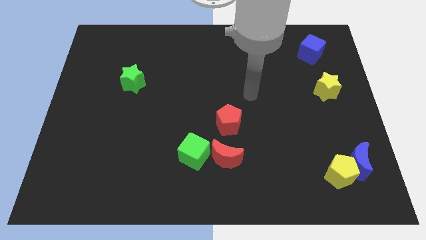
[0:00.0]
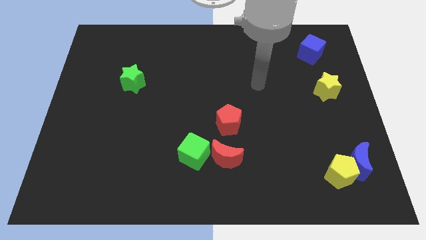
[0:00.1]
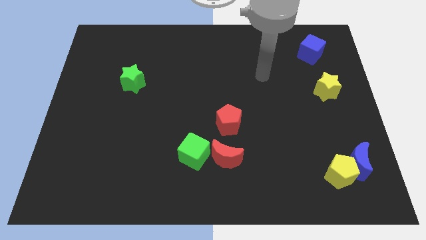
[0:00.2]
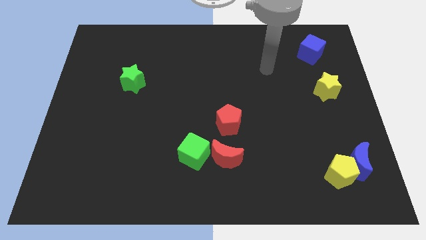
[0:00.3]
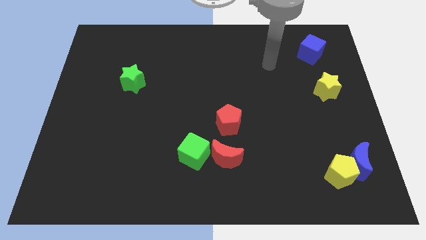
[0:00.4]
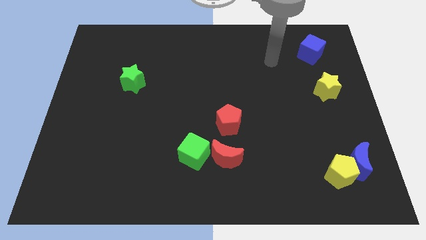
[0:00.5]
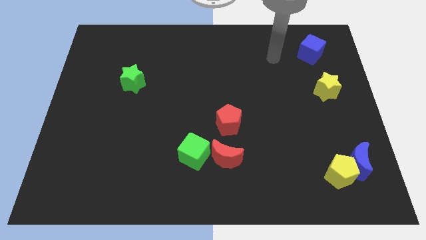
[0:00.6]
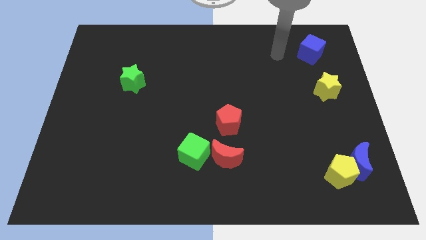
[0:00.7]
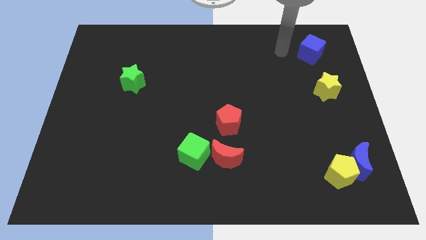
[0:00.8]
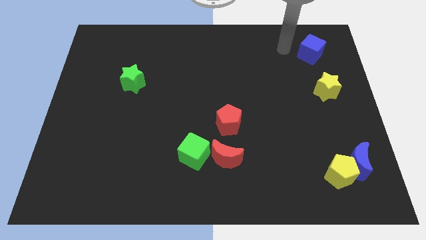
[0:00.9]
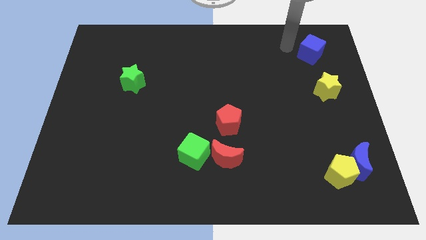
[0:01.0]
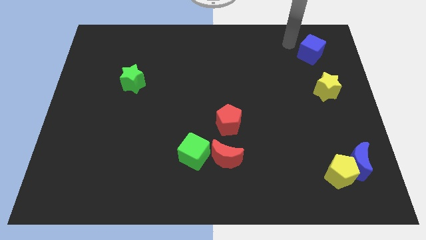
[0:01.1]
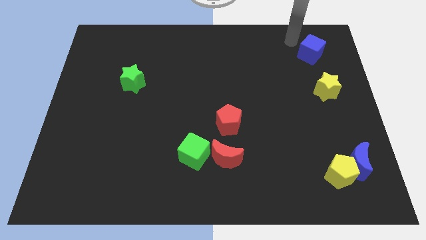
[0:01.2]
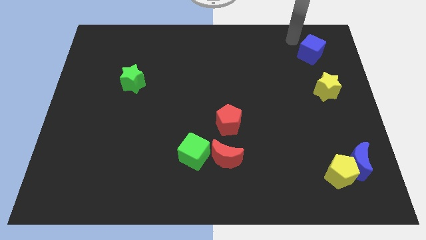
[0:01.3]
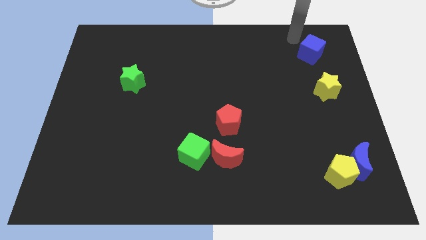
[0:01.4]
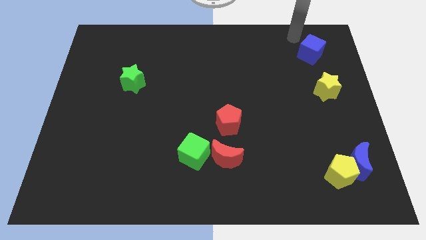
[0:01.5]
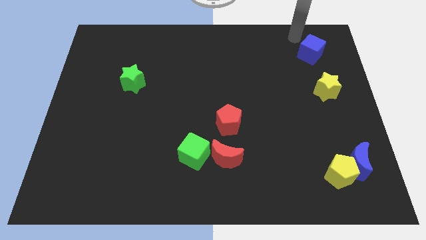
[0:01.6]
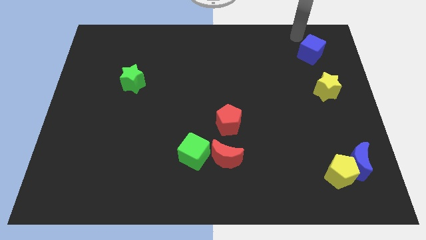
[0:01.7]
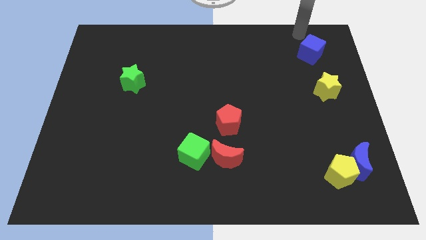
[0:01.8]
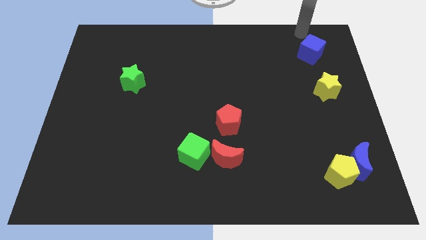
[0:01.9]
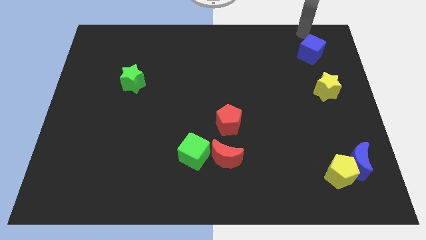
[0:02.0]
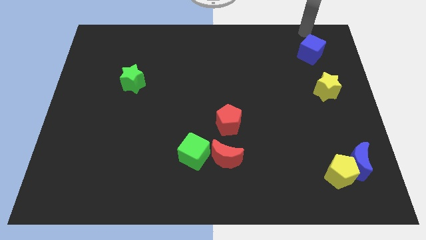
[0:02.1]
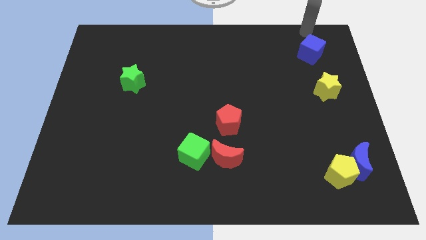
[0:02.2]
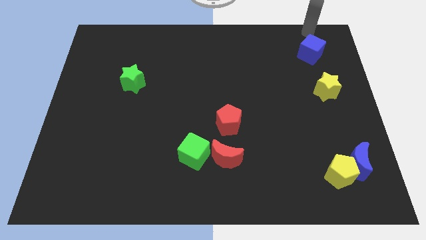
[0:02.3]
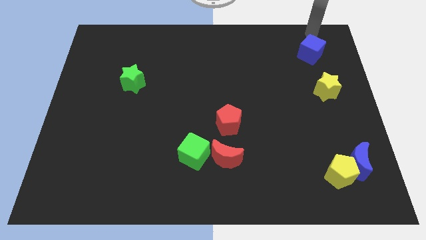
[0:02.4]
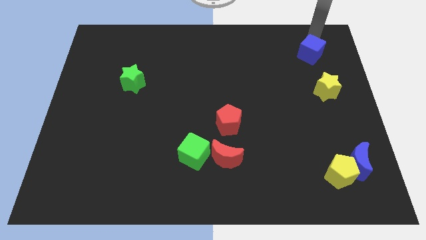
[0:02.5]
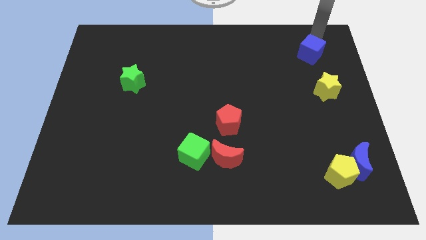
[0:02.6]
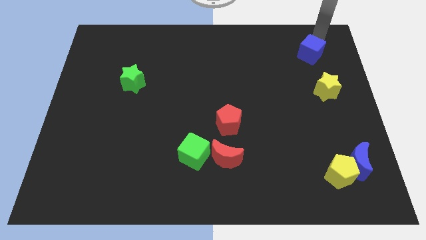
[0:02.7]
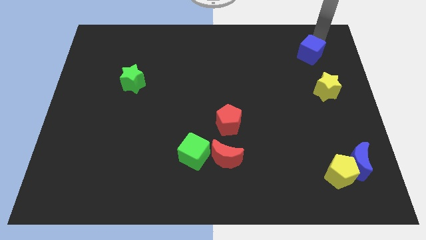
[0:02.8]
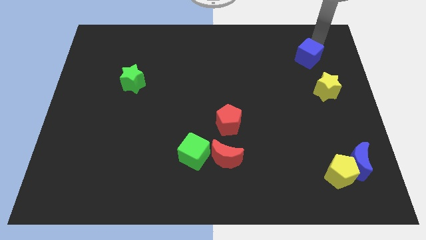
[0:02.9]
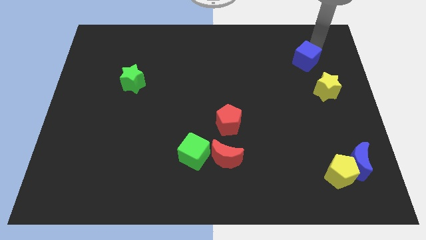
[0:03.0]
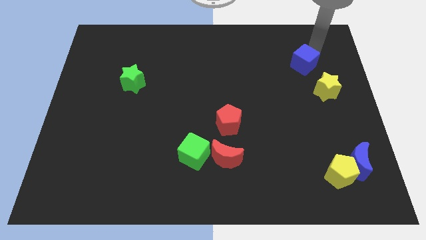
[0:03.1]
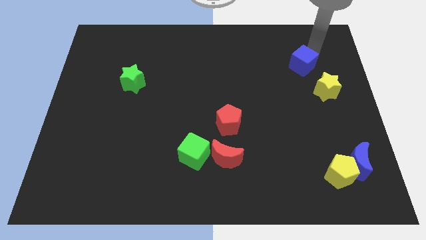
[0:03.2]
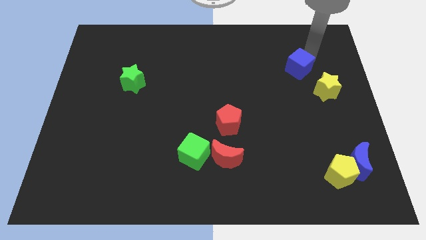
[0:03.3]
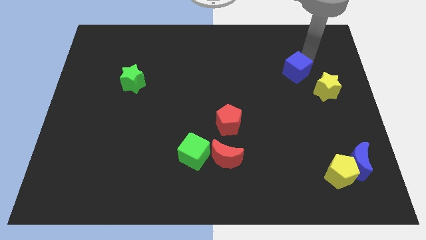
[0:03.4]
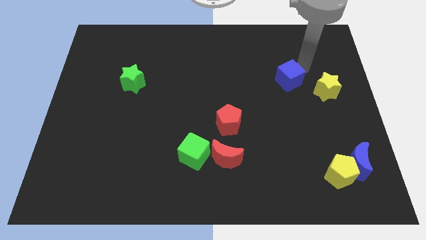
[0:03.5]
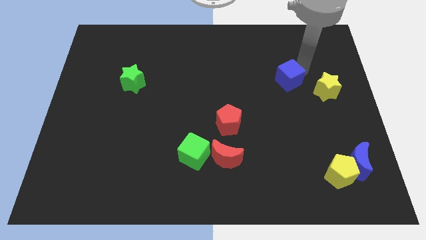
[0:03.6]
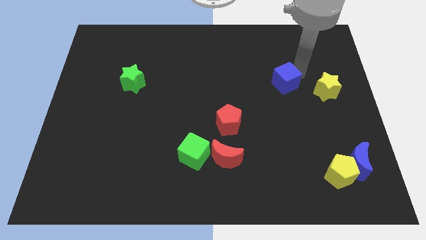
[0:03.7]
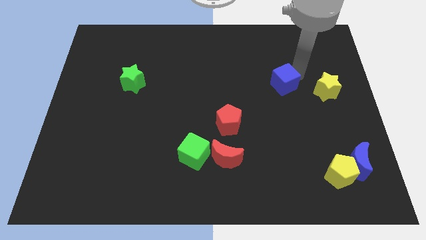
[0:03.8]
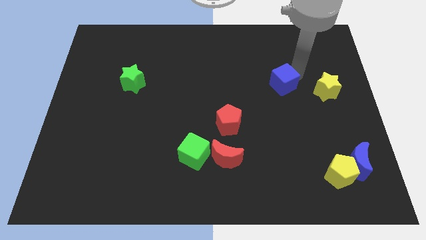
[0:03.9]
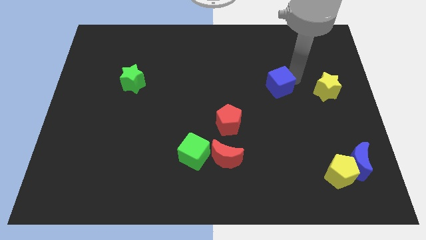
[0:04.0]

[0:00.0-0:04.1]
move the blue cube to the left of the yellow star

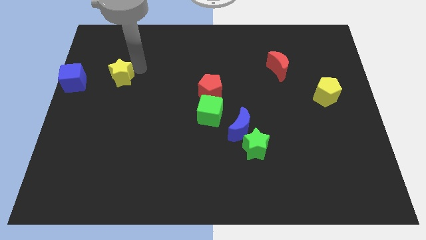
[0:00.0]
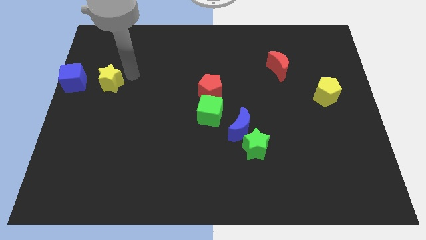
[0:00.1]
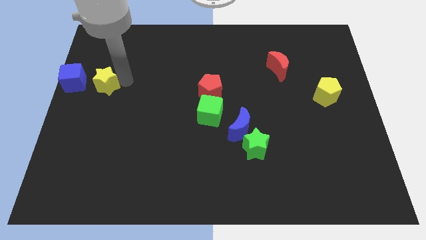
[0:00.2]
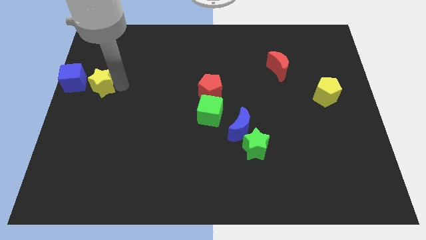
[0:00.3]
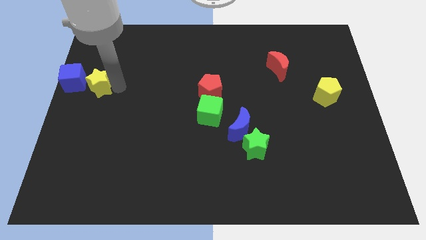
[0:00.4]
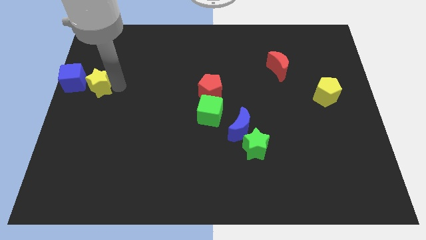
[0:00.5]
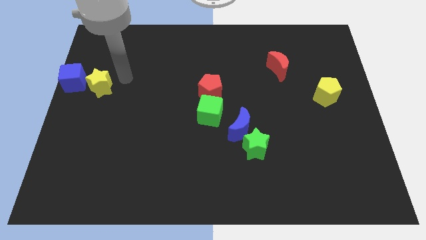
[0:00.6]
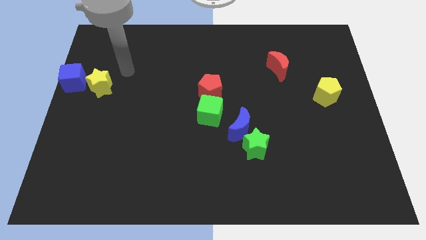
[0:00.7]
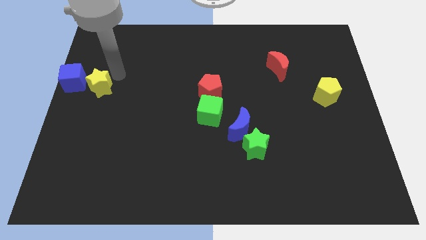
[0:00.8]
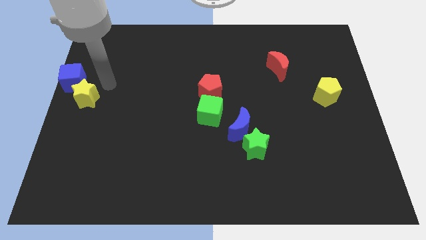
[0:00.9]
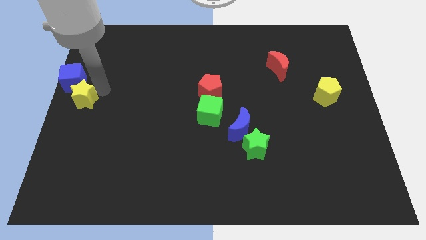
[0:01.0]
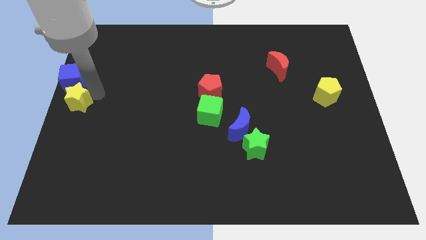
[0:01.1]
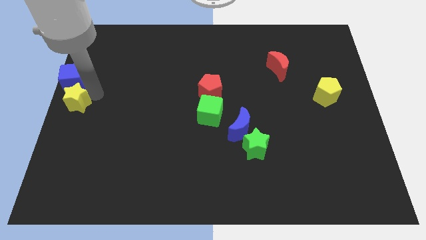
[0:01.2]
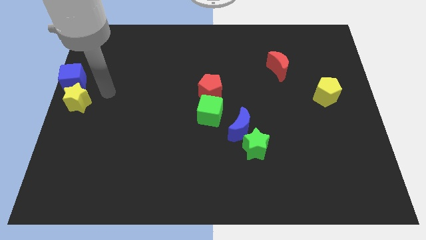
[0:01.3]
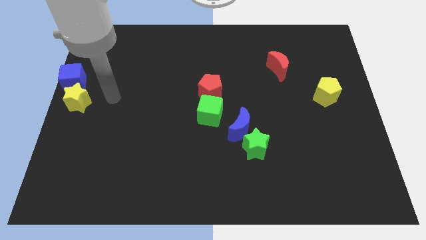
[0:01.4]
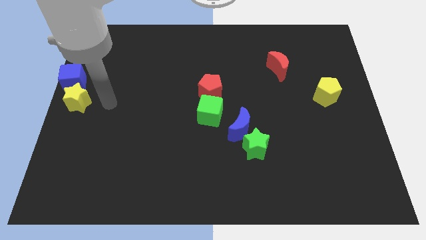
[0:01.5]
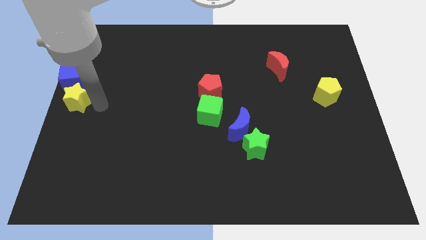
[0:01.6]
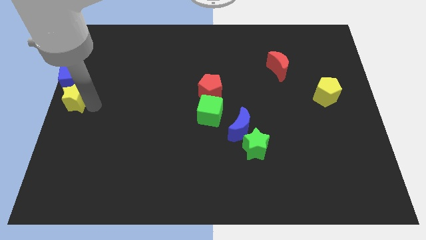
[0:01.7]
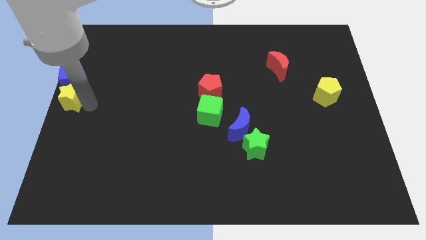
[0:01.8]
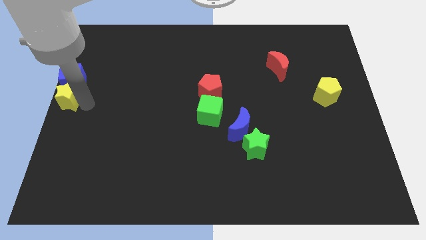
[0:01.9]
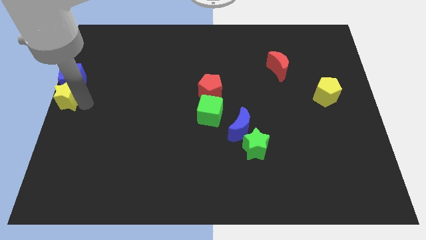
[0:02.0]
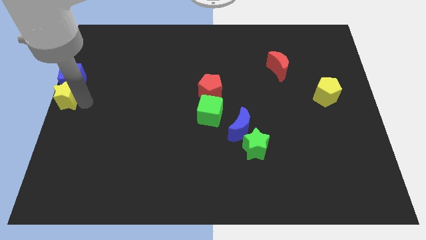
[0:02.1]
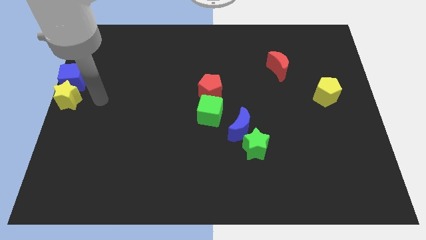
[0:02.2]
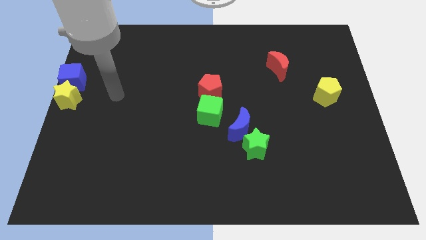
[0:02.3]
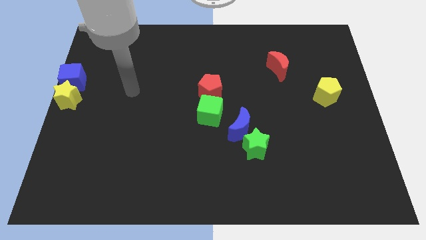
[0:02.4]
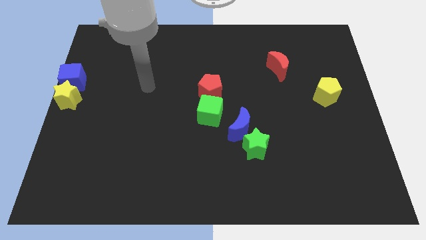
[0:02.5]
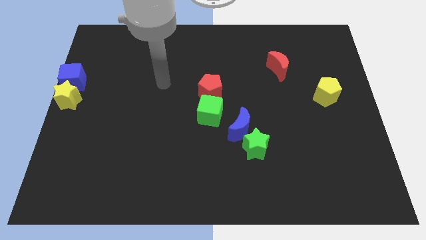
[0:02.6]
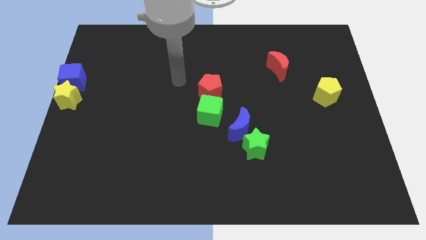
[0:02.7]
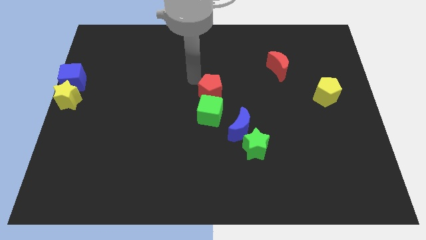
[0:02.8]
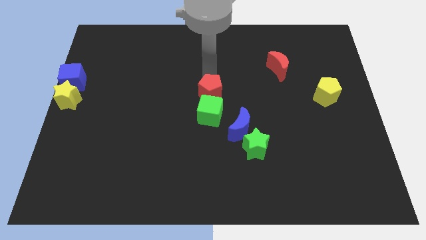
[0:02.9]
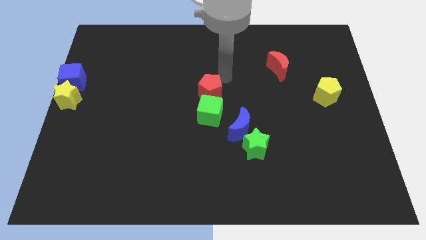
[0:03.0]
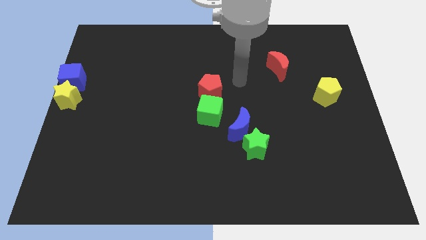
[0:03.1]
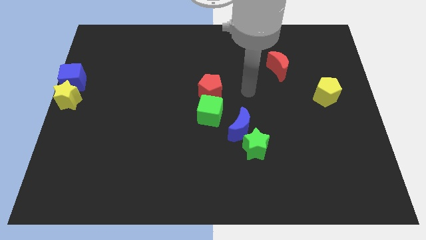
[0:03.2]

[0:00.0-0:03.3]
move the yellow star to the bottom of the blue cube

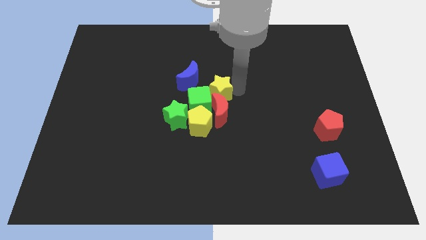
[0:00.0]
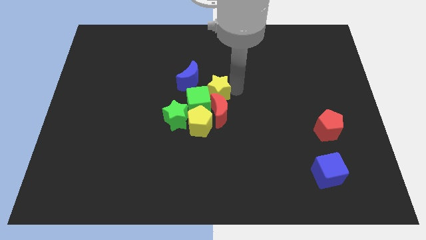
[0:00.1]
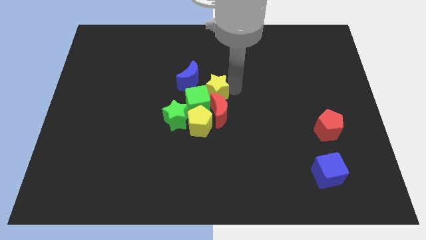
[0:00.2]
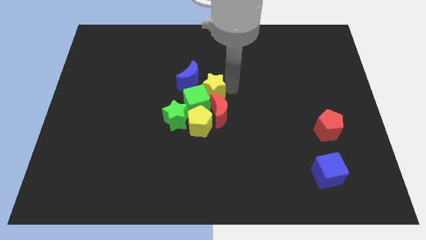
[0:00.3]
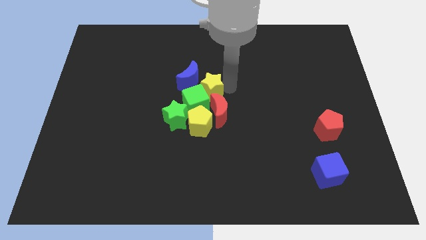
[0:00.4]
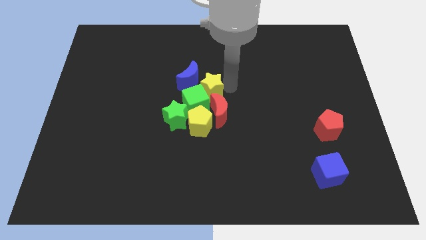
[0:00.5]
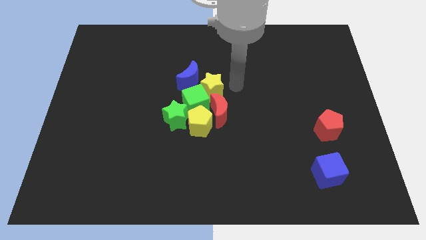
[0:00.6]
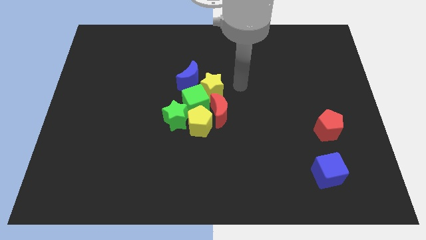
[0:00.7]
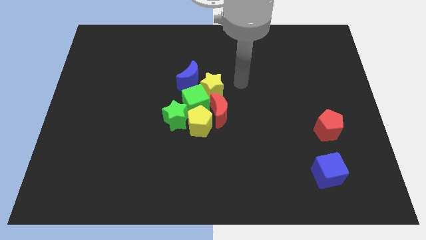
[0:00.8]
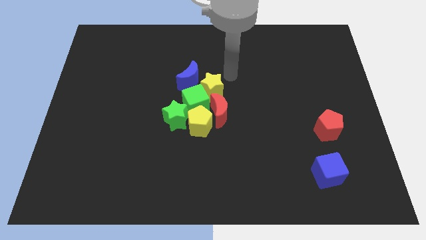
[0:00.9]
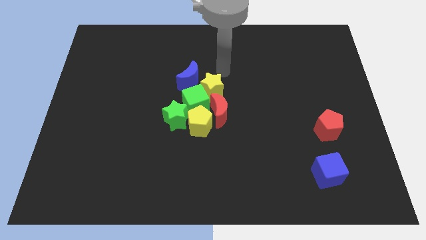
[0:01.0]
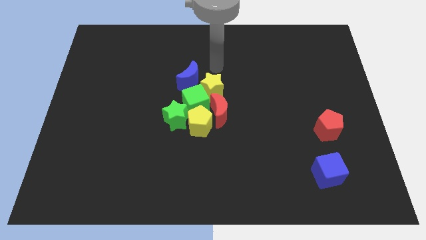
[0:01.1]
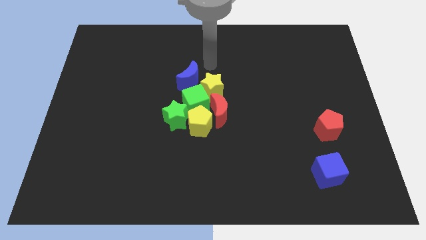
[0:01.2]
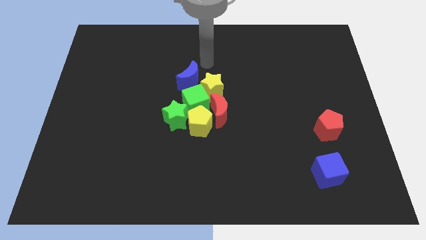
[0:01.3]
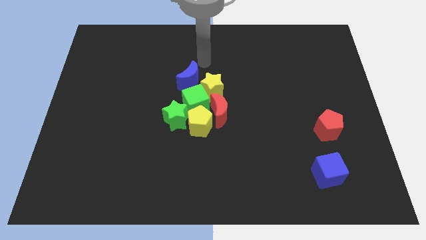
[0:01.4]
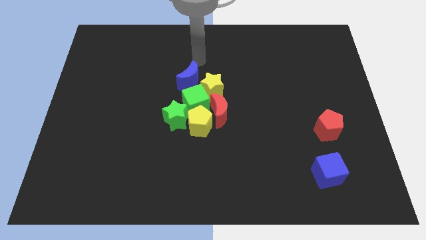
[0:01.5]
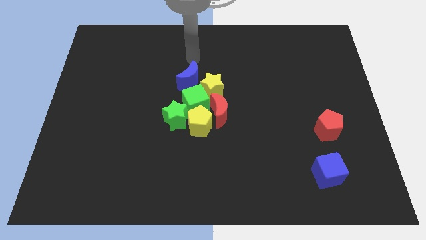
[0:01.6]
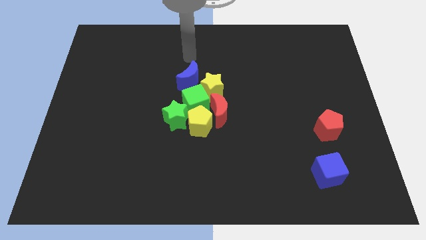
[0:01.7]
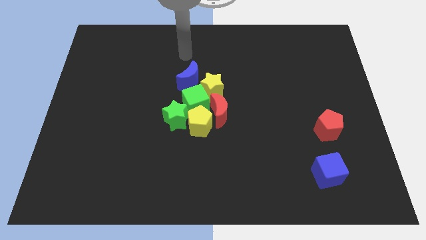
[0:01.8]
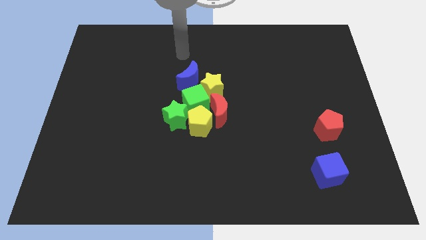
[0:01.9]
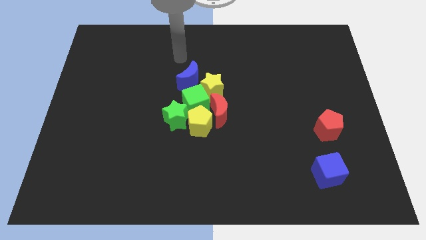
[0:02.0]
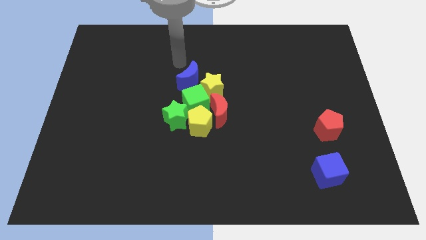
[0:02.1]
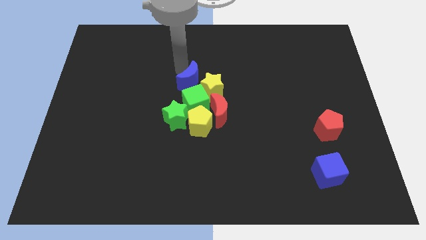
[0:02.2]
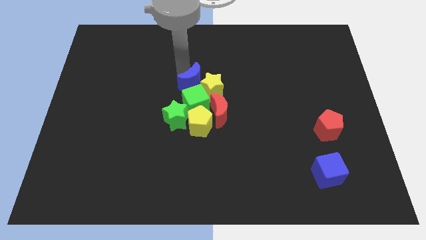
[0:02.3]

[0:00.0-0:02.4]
move your arm away from the yellow star
